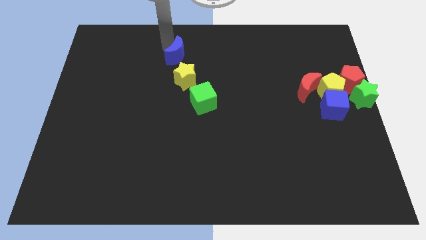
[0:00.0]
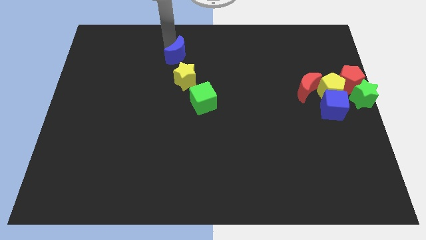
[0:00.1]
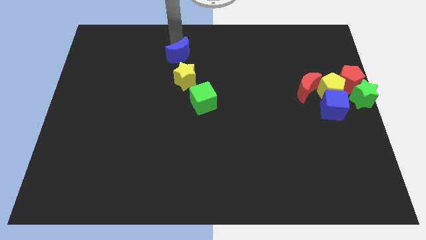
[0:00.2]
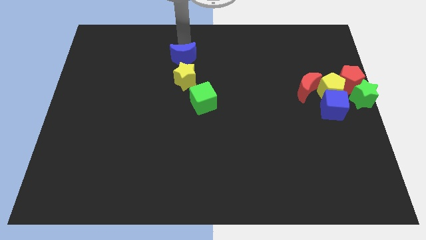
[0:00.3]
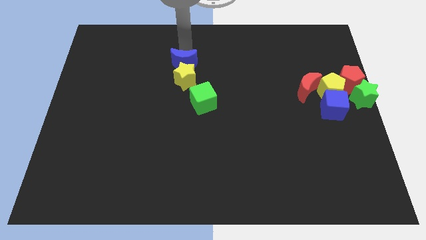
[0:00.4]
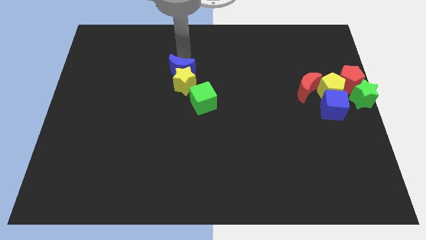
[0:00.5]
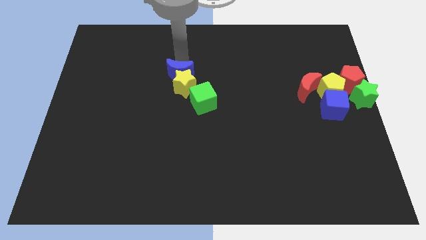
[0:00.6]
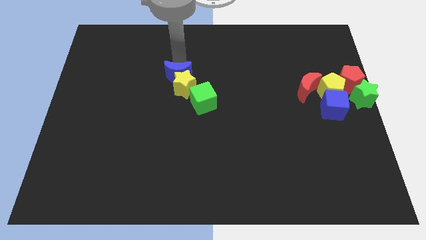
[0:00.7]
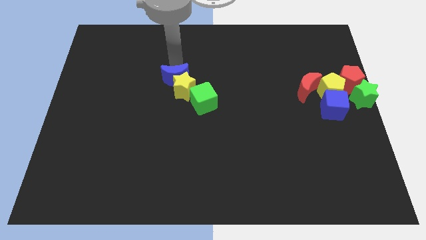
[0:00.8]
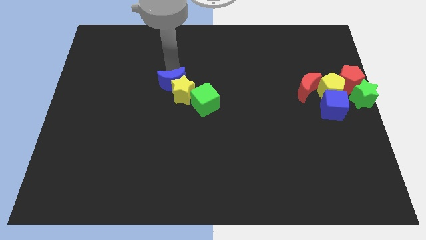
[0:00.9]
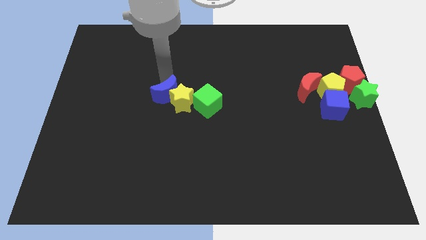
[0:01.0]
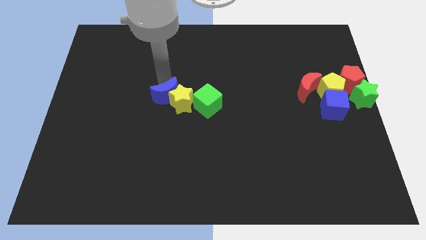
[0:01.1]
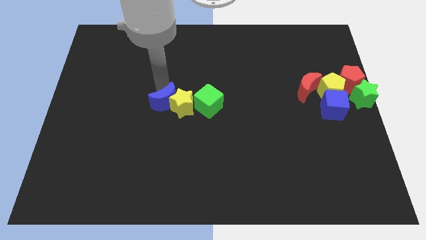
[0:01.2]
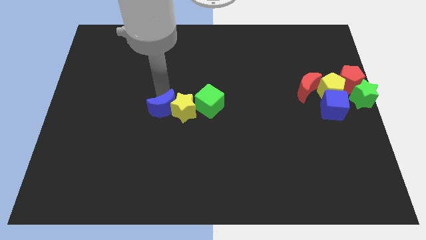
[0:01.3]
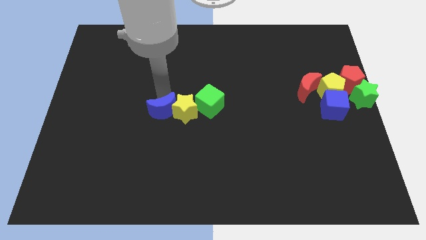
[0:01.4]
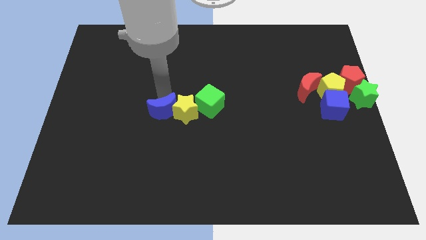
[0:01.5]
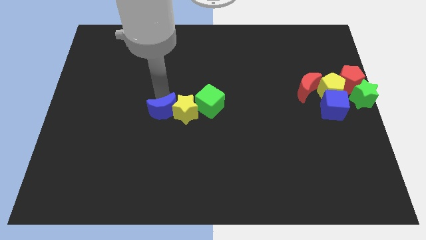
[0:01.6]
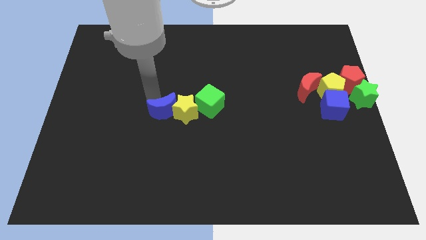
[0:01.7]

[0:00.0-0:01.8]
place the blue moon yellow star green cube in a straight line

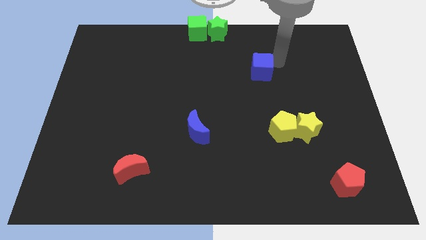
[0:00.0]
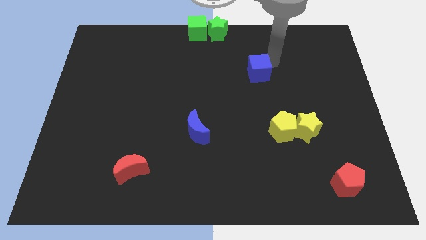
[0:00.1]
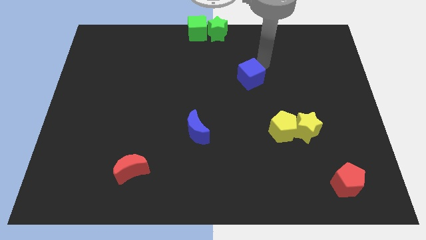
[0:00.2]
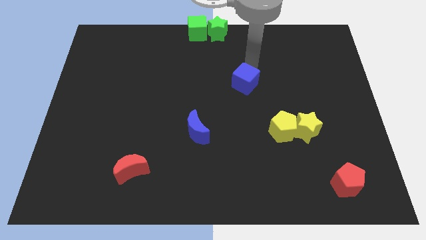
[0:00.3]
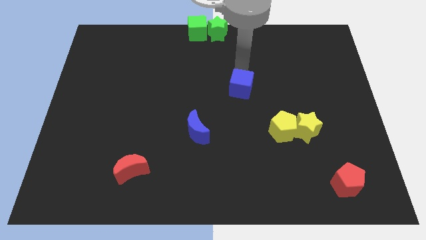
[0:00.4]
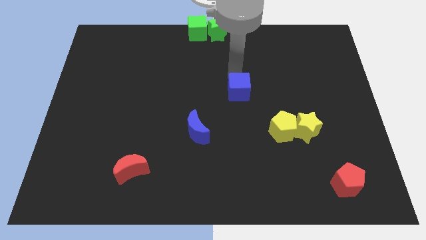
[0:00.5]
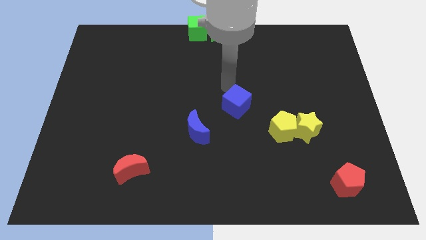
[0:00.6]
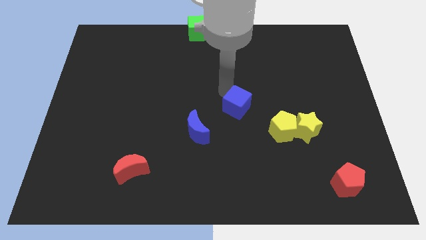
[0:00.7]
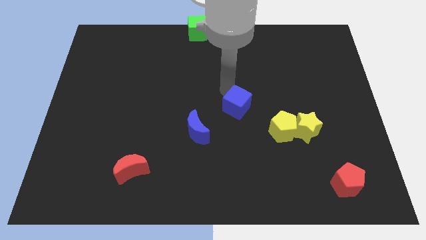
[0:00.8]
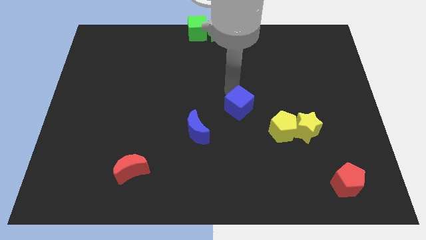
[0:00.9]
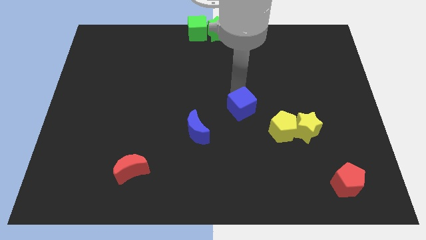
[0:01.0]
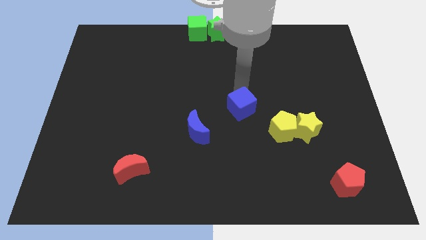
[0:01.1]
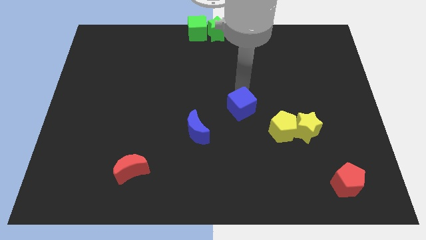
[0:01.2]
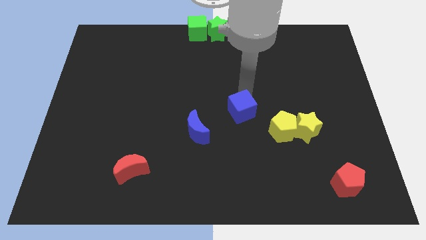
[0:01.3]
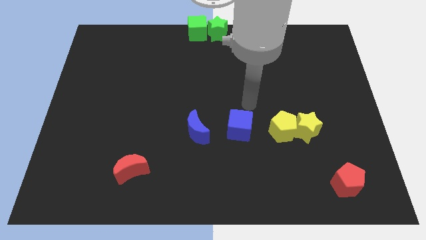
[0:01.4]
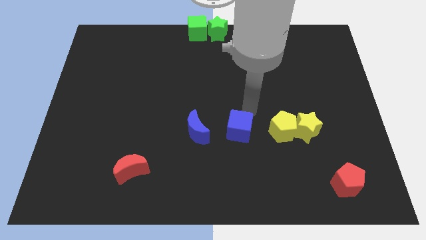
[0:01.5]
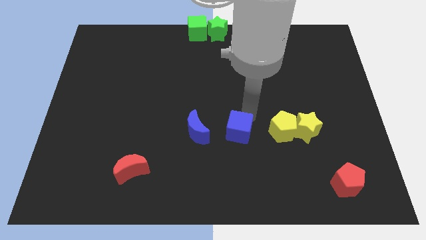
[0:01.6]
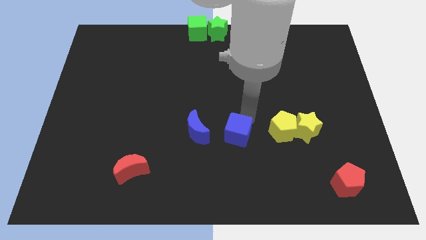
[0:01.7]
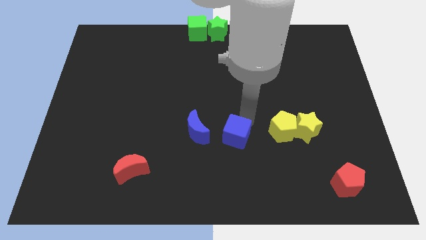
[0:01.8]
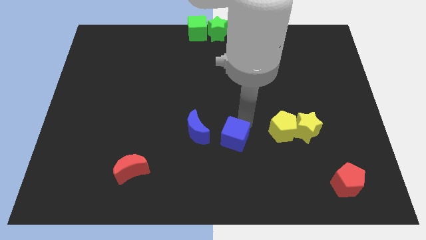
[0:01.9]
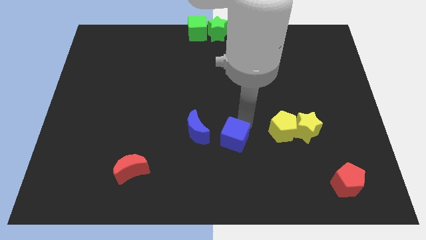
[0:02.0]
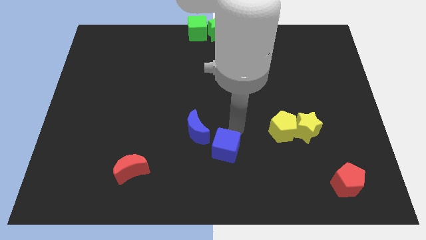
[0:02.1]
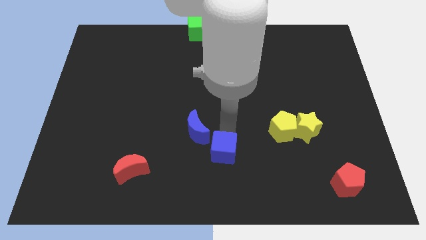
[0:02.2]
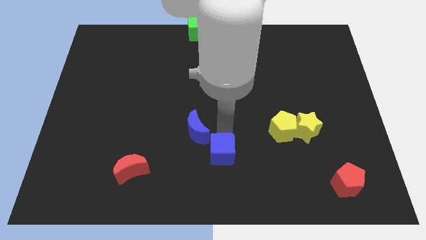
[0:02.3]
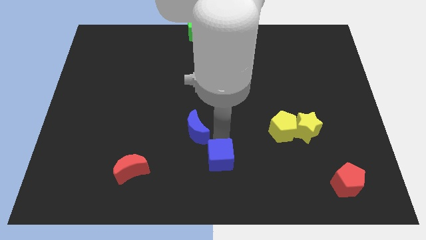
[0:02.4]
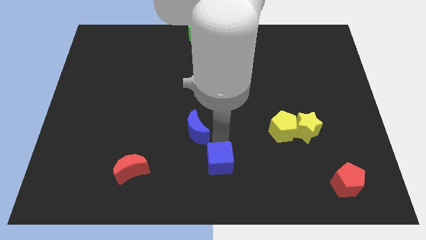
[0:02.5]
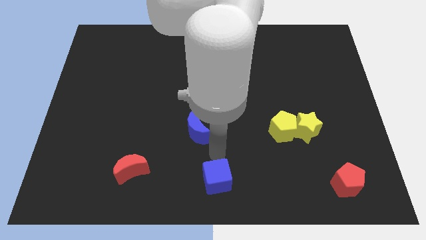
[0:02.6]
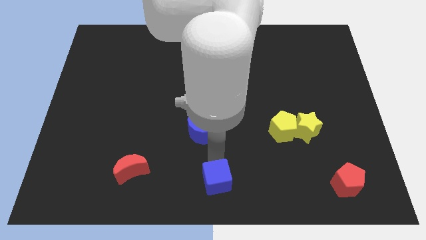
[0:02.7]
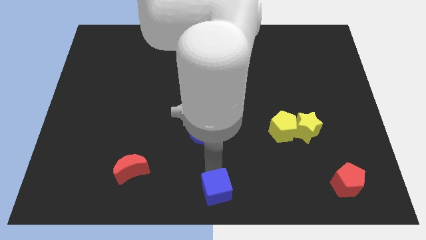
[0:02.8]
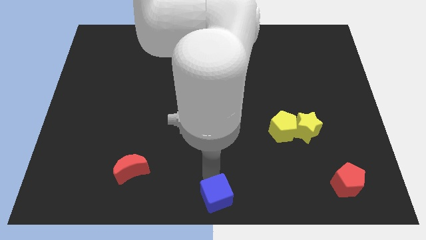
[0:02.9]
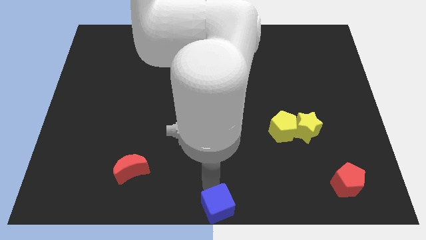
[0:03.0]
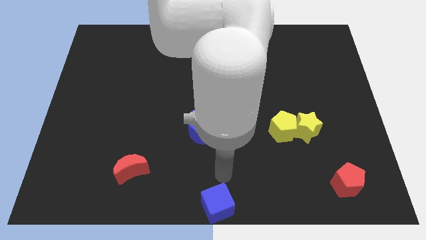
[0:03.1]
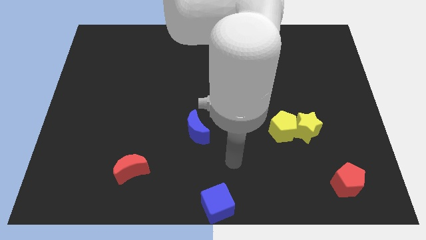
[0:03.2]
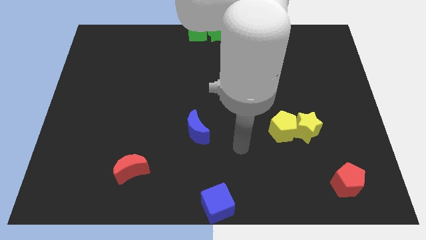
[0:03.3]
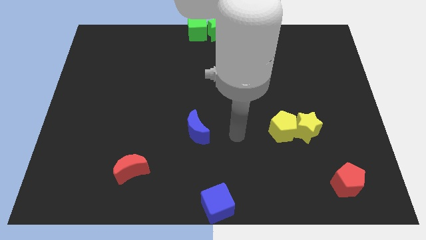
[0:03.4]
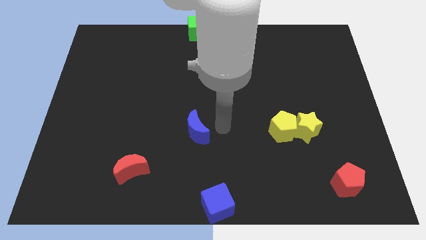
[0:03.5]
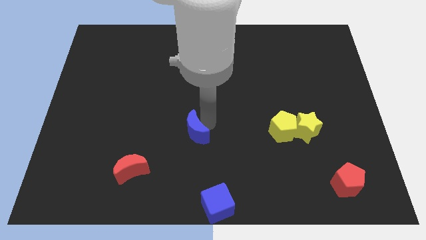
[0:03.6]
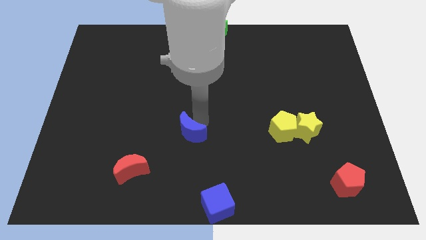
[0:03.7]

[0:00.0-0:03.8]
place the blue cube towards the bottom center of the board

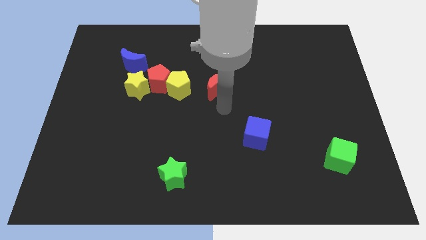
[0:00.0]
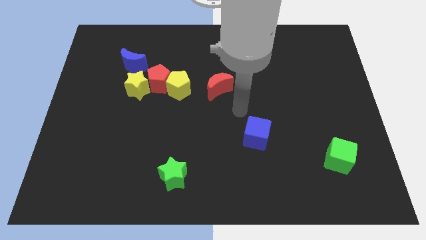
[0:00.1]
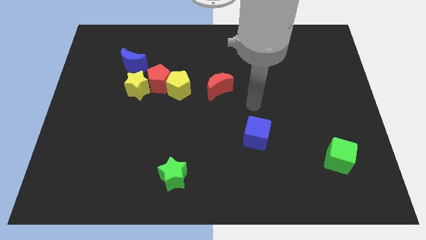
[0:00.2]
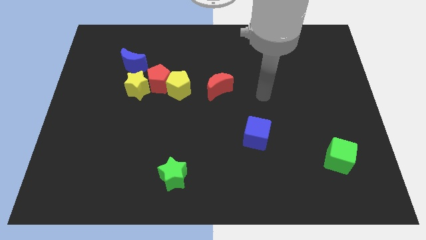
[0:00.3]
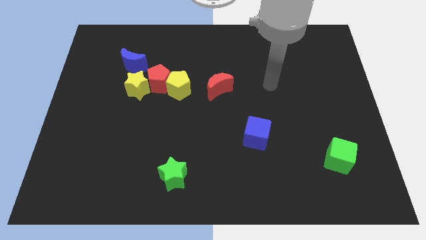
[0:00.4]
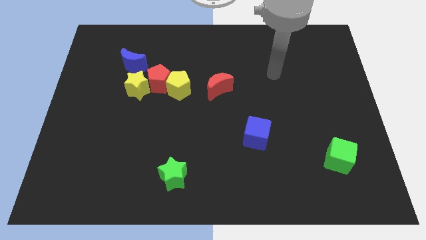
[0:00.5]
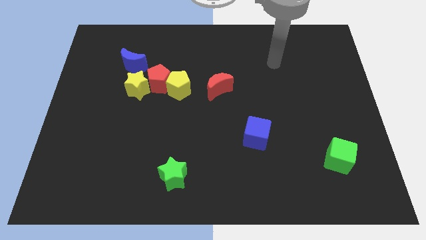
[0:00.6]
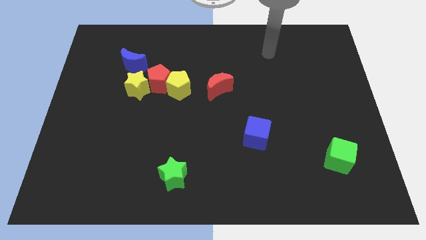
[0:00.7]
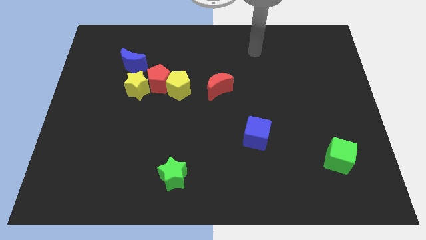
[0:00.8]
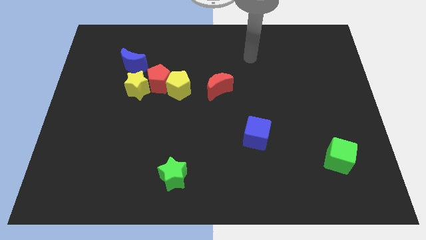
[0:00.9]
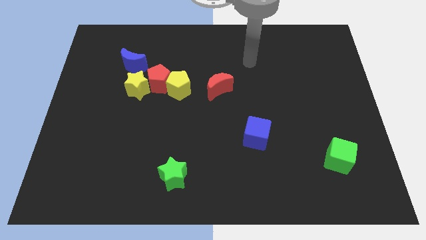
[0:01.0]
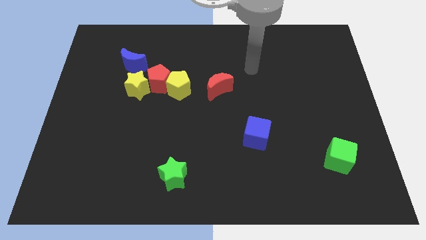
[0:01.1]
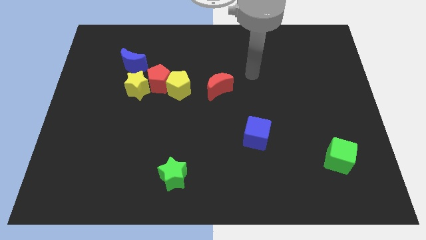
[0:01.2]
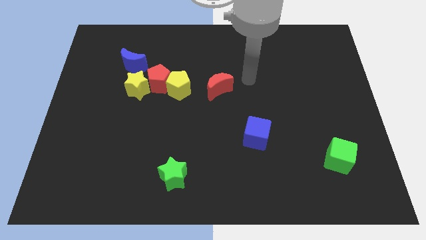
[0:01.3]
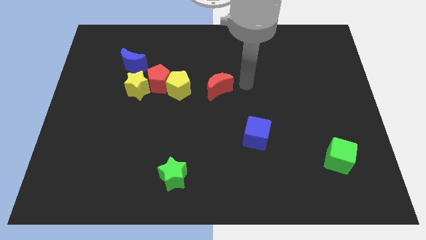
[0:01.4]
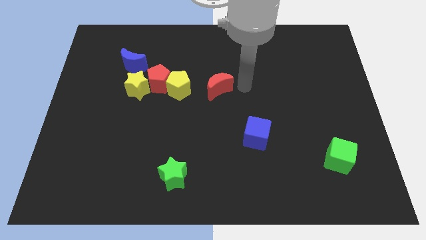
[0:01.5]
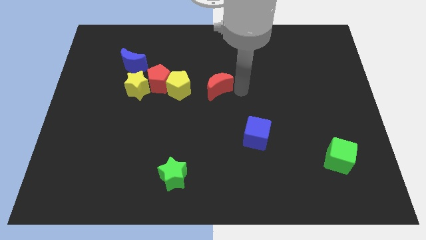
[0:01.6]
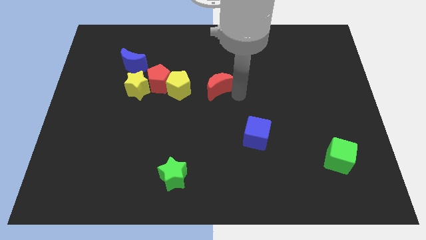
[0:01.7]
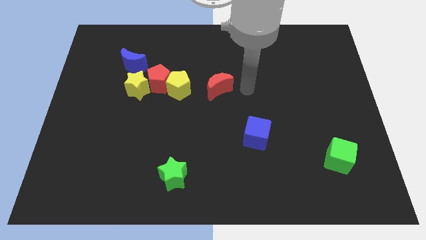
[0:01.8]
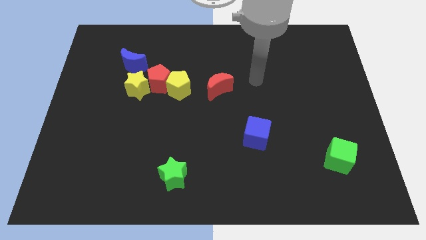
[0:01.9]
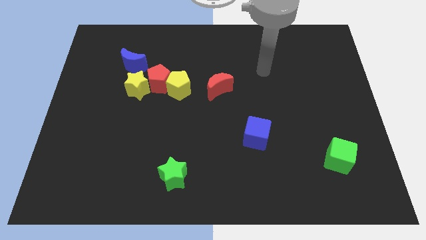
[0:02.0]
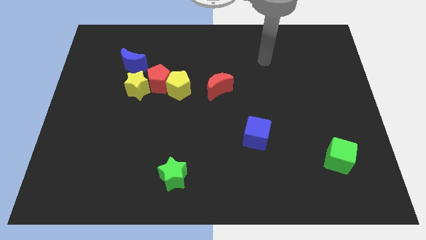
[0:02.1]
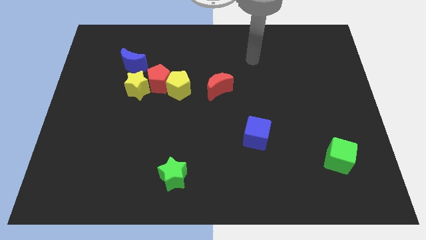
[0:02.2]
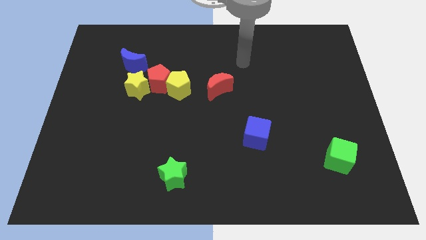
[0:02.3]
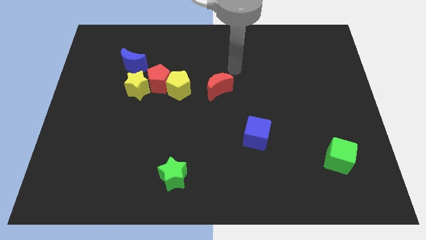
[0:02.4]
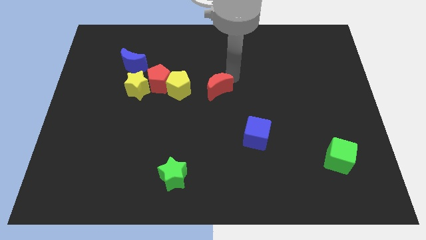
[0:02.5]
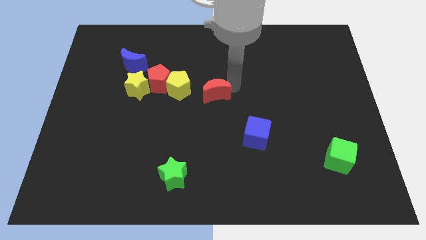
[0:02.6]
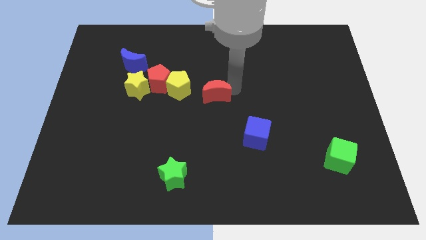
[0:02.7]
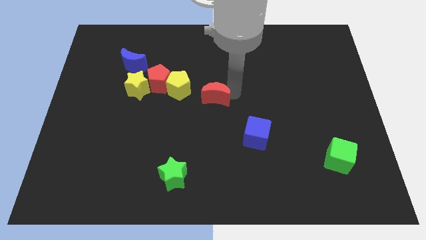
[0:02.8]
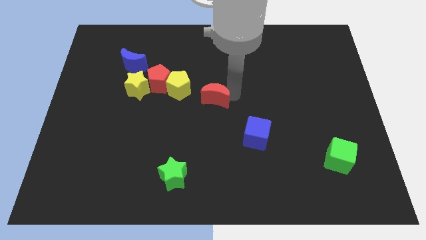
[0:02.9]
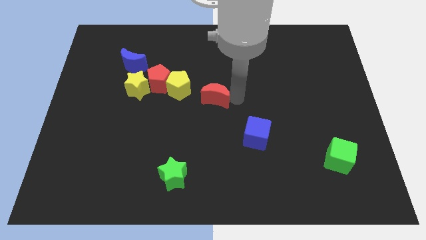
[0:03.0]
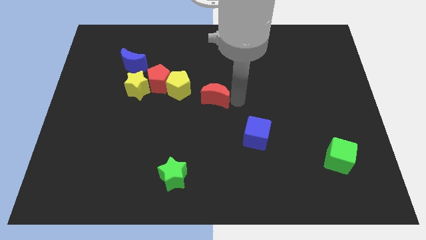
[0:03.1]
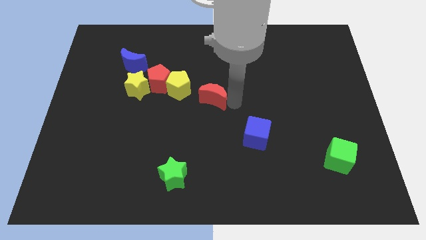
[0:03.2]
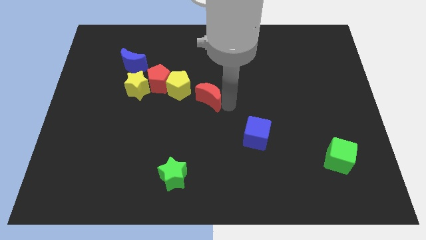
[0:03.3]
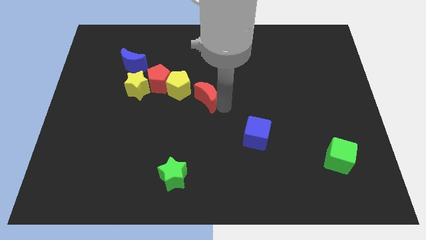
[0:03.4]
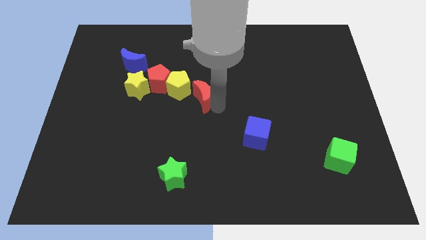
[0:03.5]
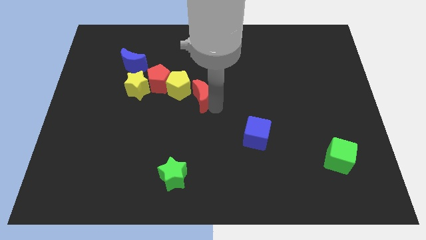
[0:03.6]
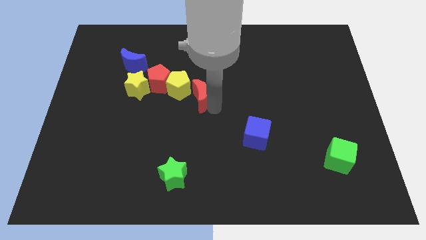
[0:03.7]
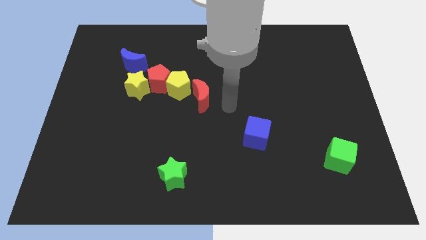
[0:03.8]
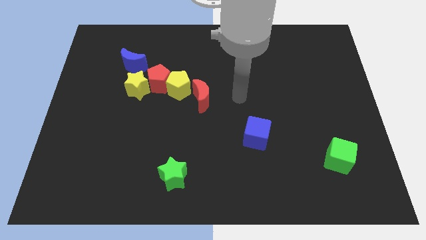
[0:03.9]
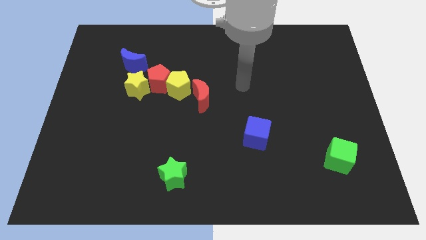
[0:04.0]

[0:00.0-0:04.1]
move the red moon close to the yellow pentagon
